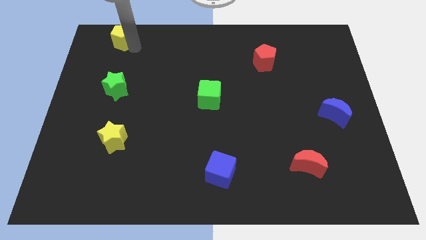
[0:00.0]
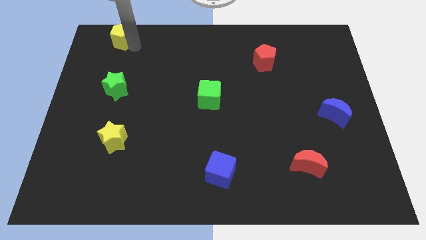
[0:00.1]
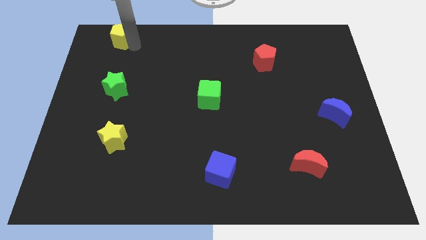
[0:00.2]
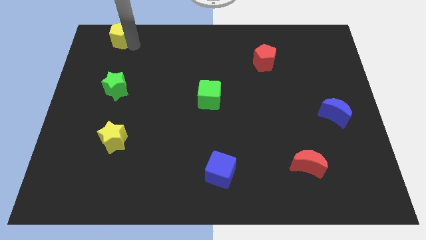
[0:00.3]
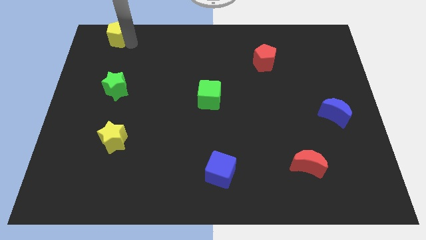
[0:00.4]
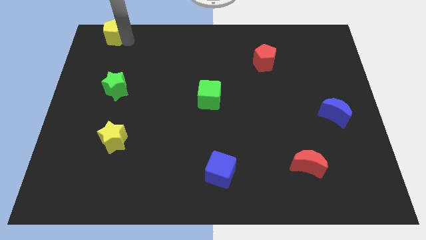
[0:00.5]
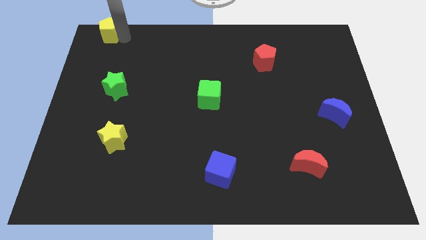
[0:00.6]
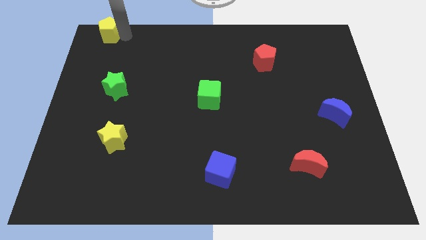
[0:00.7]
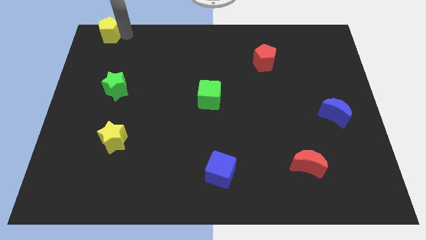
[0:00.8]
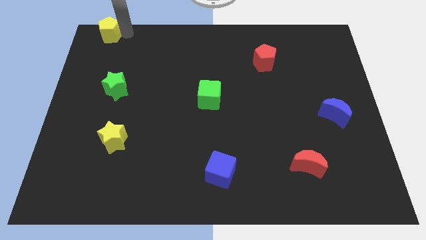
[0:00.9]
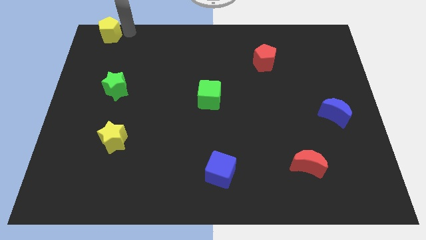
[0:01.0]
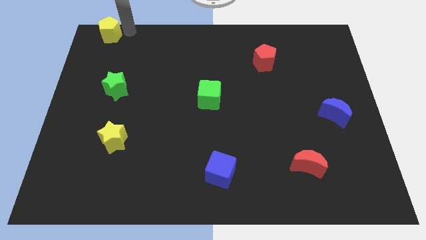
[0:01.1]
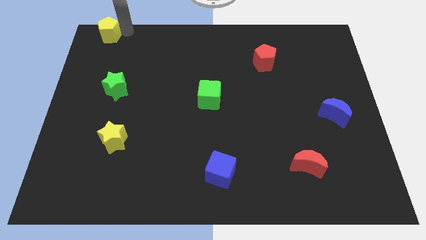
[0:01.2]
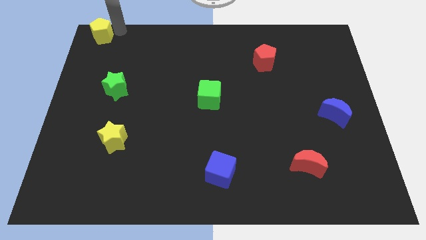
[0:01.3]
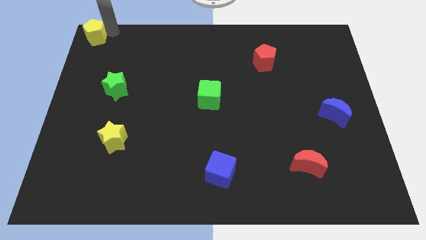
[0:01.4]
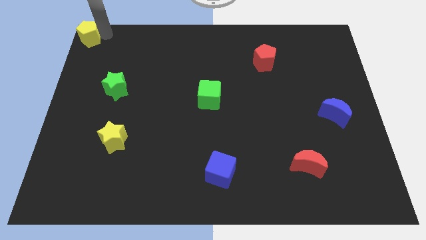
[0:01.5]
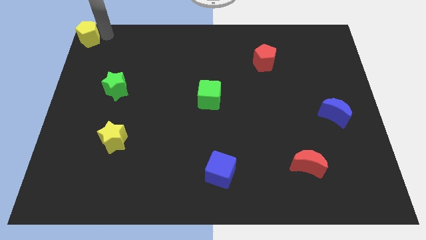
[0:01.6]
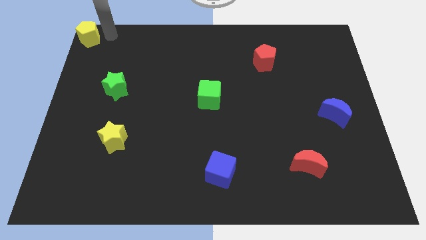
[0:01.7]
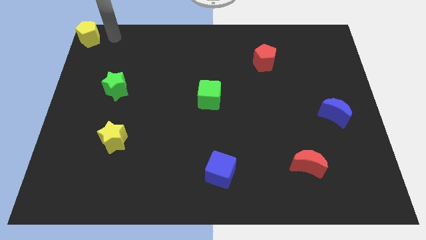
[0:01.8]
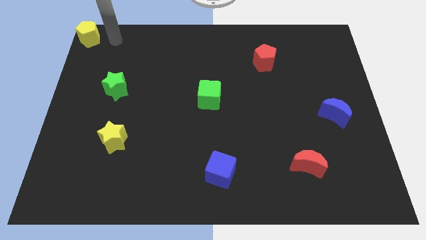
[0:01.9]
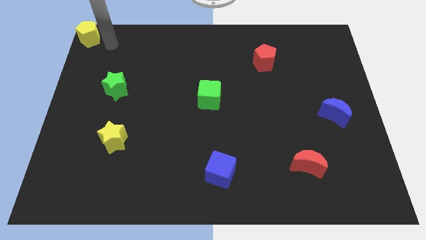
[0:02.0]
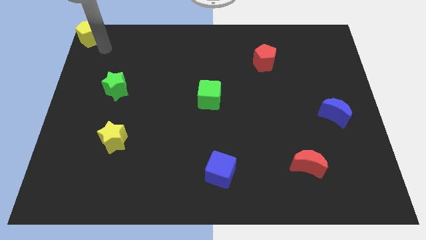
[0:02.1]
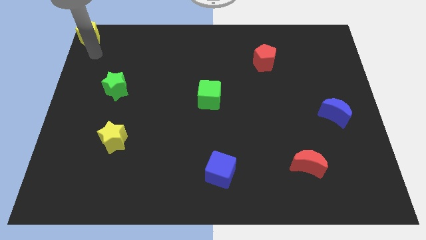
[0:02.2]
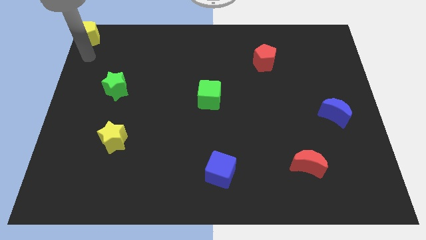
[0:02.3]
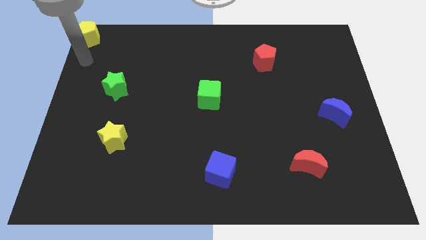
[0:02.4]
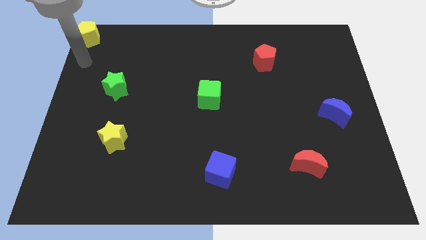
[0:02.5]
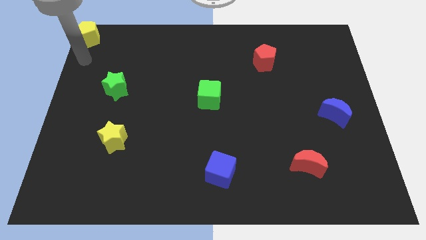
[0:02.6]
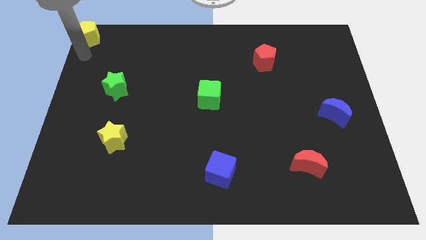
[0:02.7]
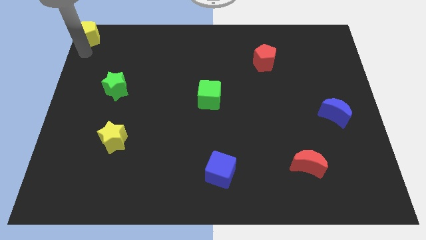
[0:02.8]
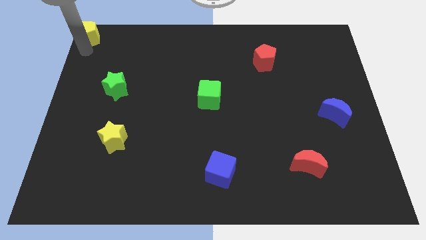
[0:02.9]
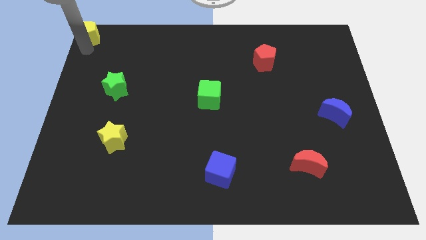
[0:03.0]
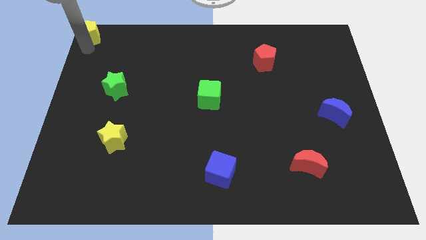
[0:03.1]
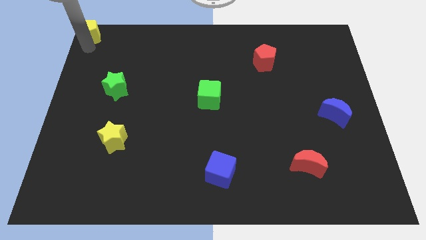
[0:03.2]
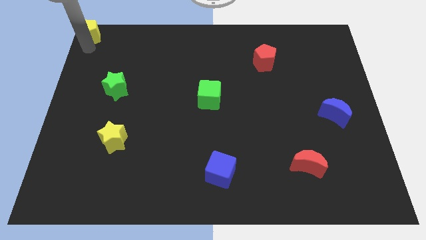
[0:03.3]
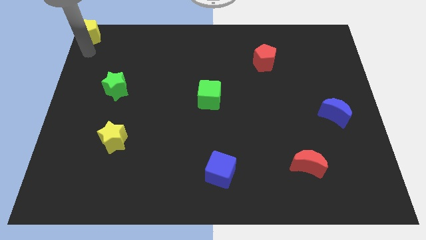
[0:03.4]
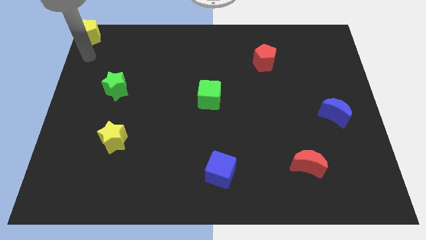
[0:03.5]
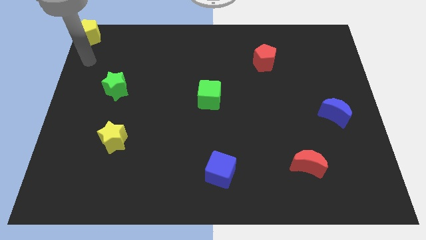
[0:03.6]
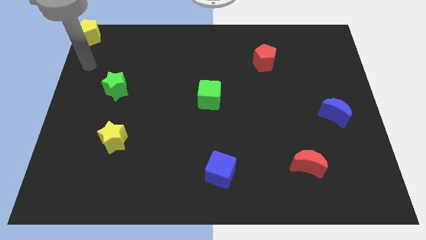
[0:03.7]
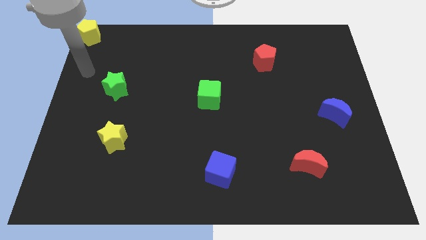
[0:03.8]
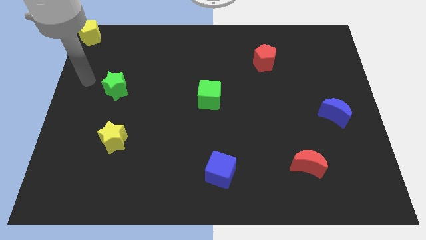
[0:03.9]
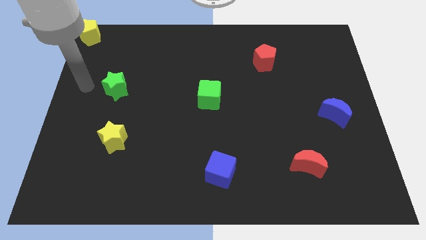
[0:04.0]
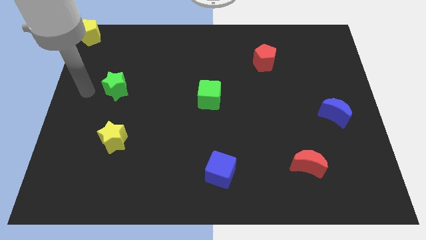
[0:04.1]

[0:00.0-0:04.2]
move the arm away from the yellow pentagon

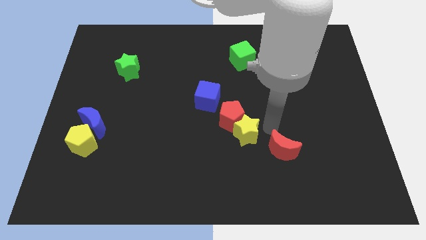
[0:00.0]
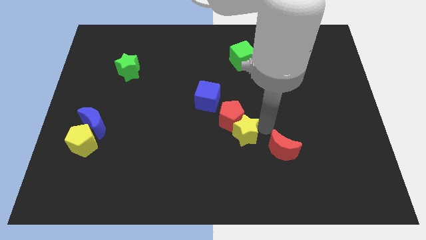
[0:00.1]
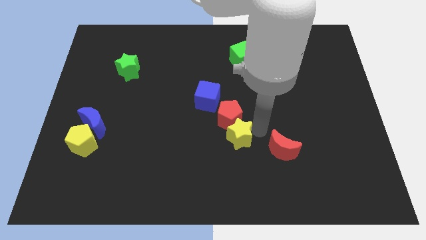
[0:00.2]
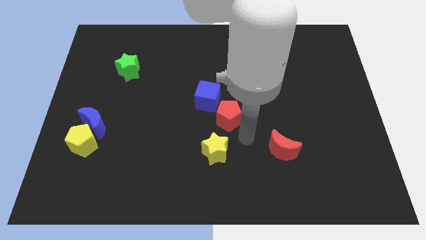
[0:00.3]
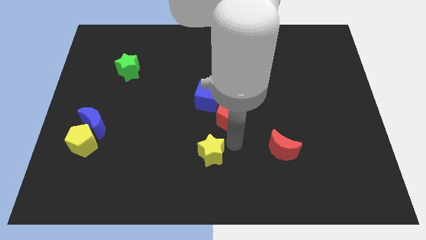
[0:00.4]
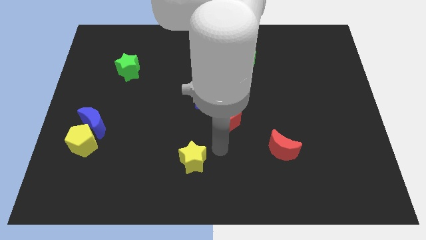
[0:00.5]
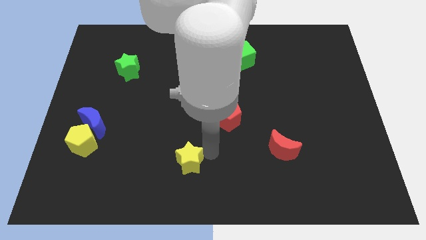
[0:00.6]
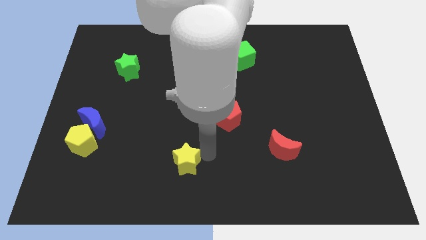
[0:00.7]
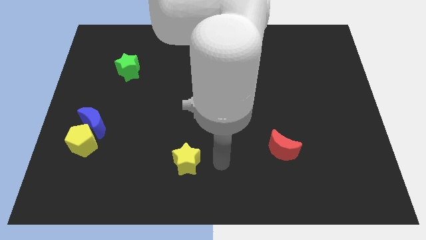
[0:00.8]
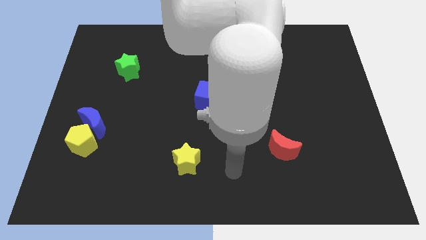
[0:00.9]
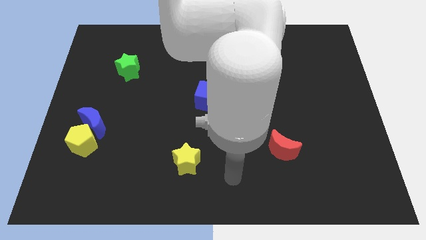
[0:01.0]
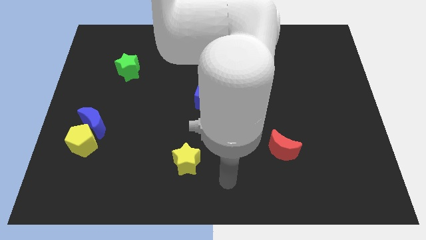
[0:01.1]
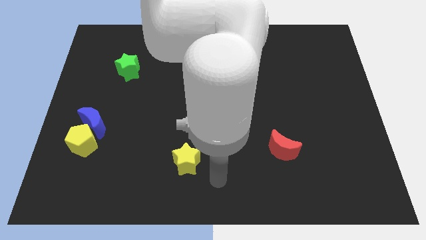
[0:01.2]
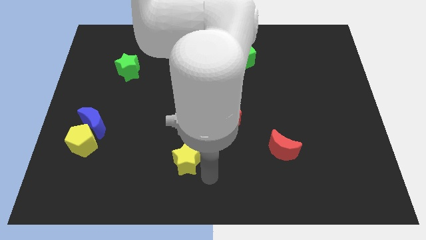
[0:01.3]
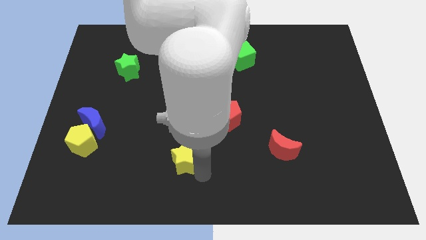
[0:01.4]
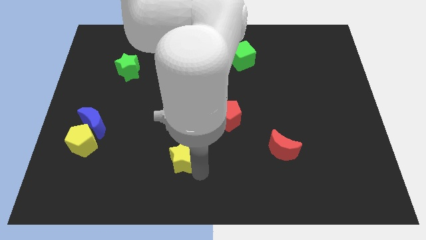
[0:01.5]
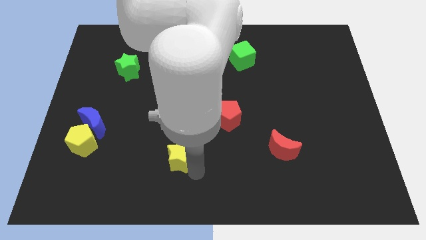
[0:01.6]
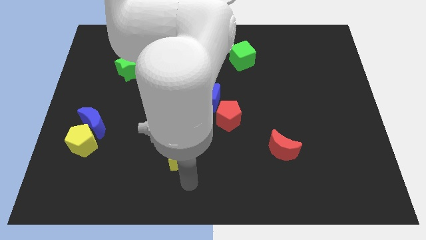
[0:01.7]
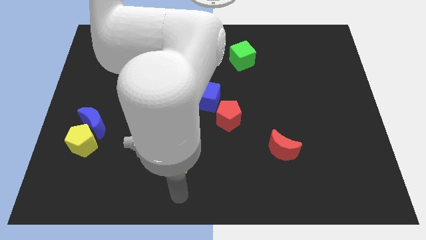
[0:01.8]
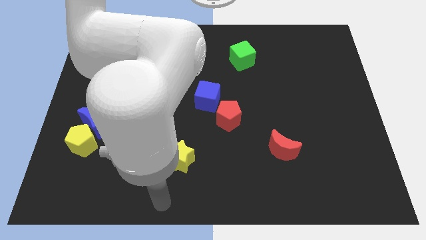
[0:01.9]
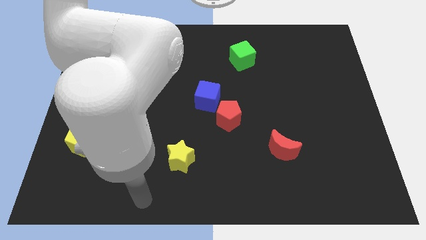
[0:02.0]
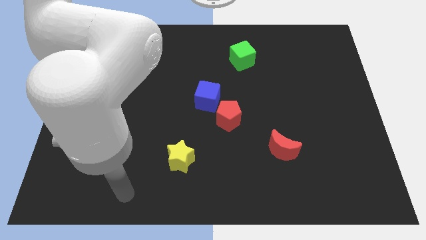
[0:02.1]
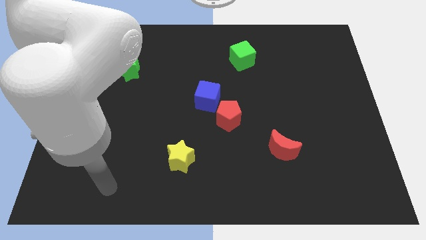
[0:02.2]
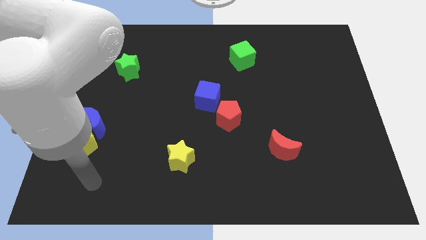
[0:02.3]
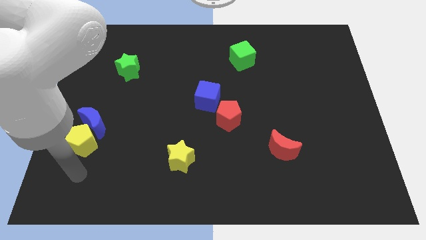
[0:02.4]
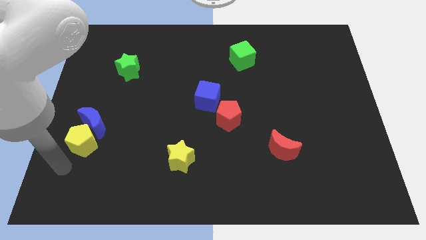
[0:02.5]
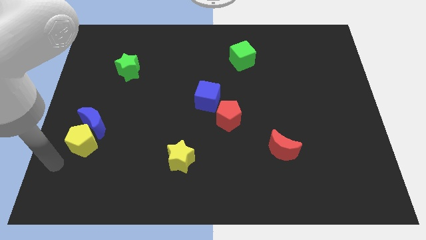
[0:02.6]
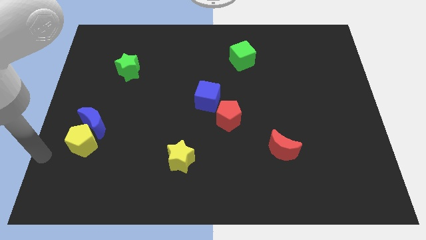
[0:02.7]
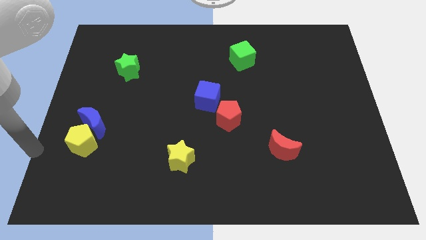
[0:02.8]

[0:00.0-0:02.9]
place the yellow star to the bottom center

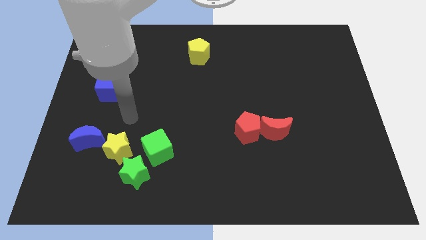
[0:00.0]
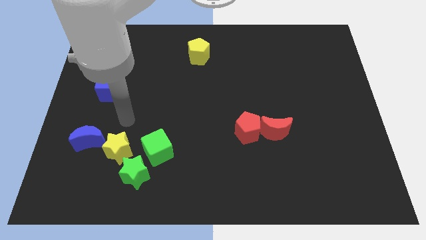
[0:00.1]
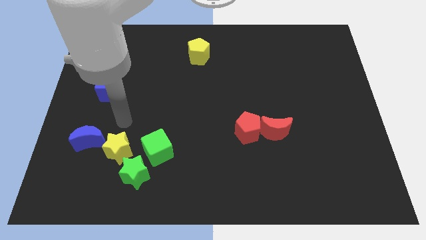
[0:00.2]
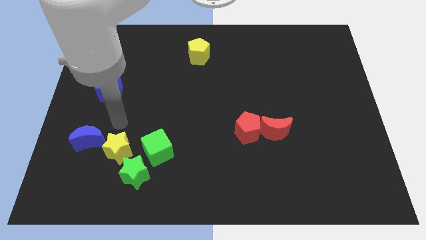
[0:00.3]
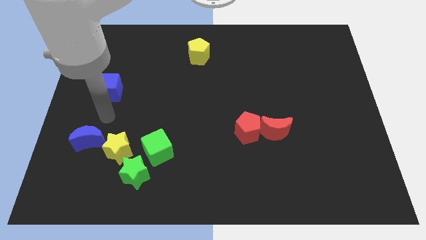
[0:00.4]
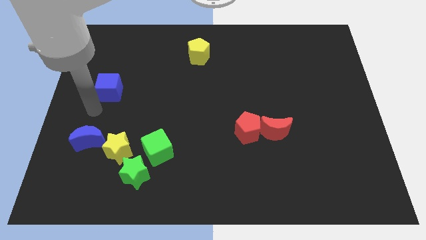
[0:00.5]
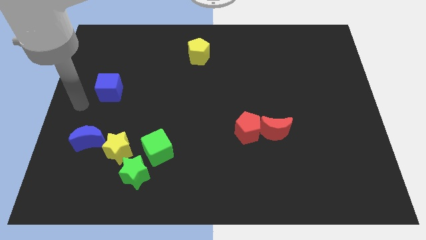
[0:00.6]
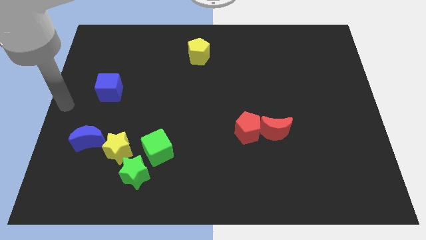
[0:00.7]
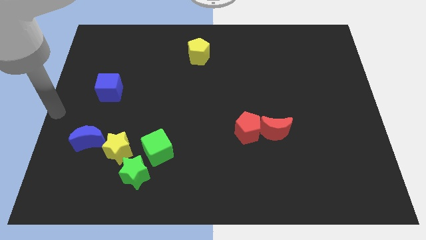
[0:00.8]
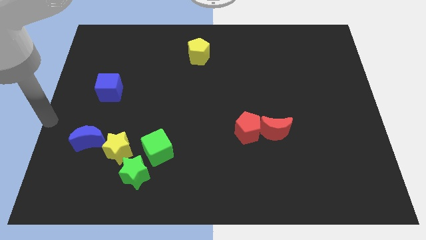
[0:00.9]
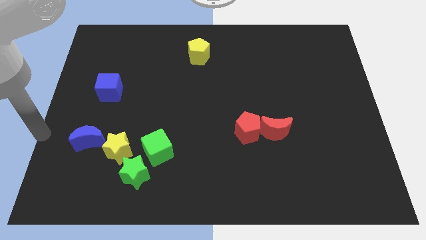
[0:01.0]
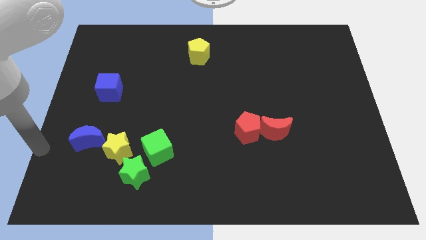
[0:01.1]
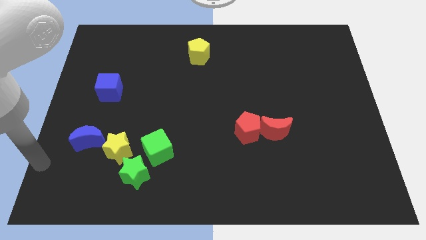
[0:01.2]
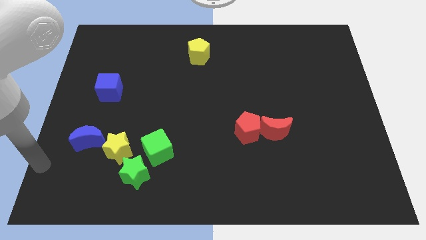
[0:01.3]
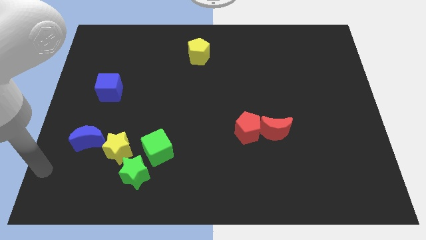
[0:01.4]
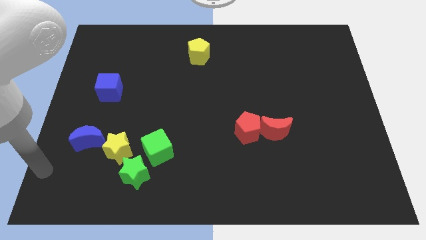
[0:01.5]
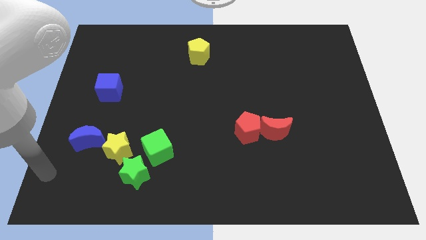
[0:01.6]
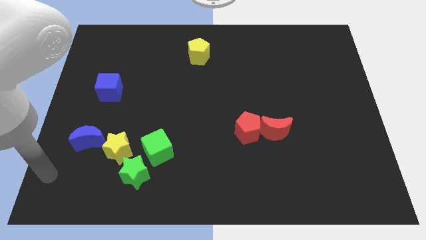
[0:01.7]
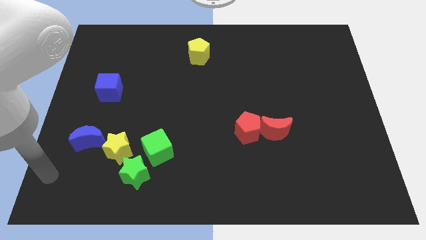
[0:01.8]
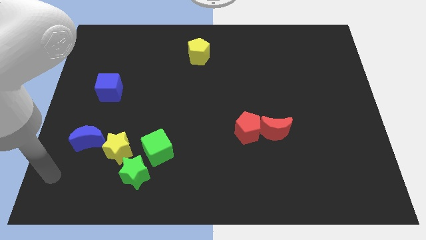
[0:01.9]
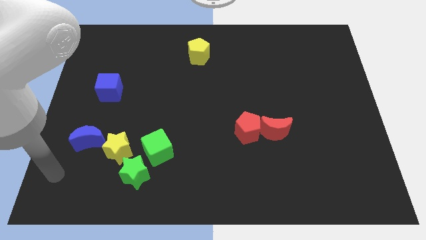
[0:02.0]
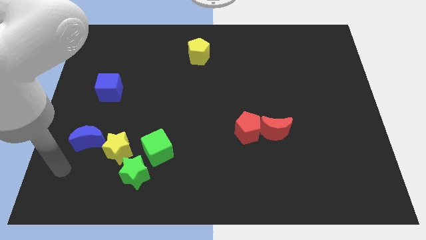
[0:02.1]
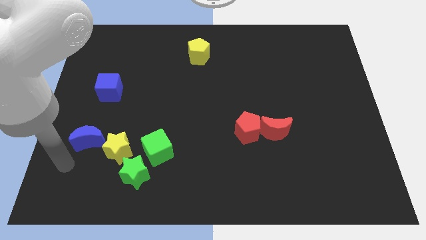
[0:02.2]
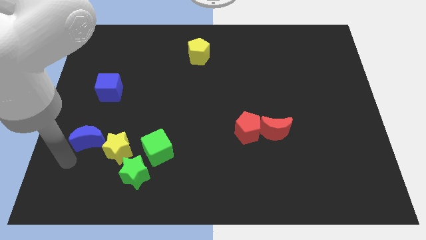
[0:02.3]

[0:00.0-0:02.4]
place your hand close to the blue crescent
